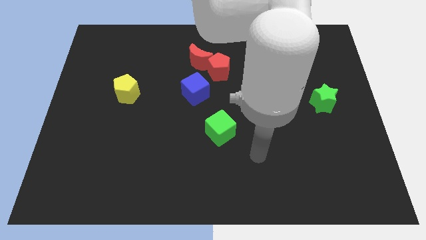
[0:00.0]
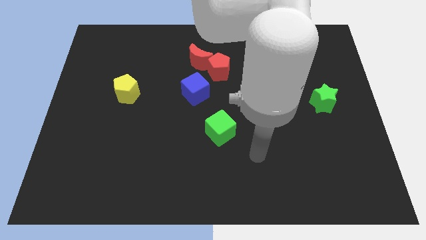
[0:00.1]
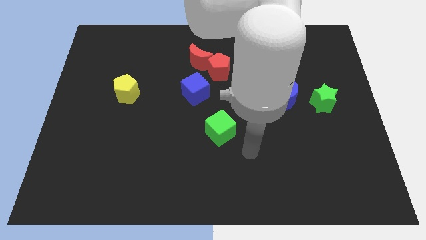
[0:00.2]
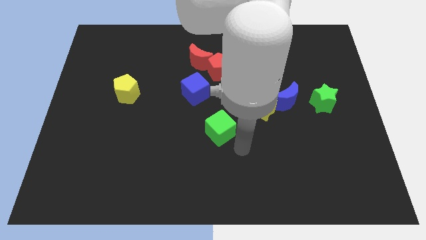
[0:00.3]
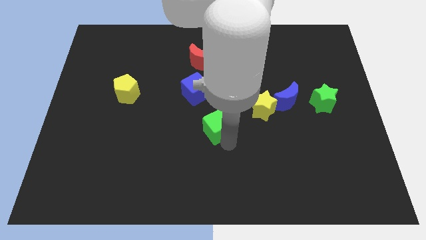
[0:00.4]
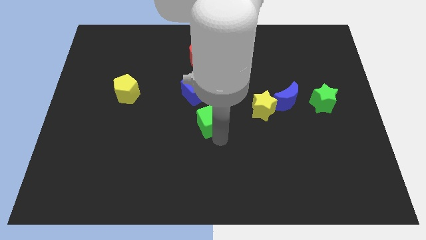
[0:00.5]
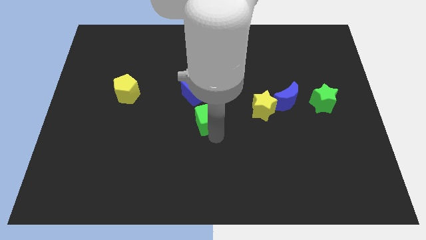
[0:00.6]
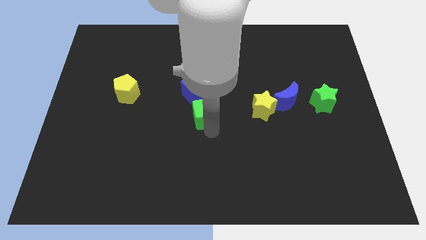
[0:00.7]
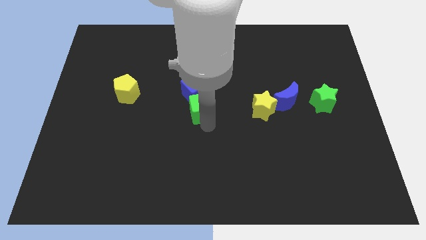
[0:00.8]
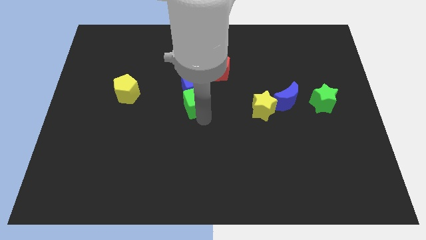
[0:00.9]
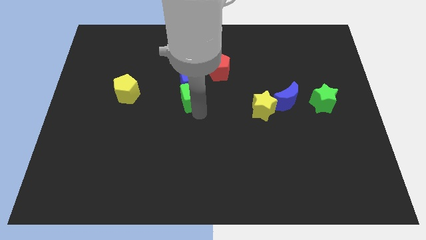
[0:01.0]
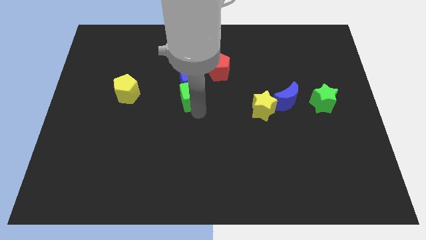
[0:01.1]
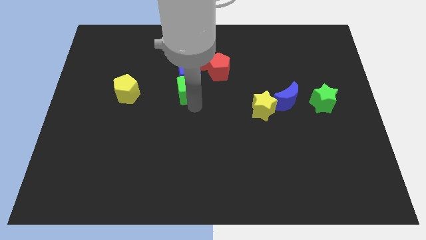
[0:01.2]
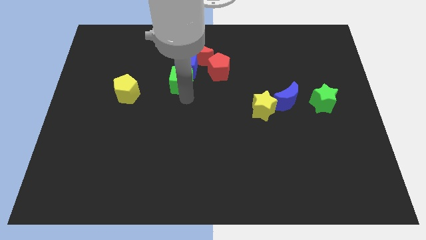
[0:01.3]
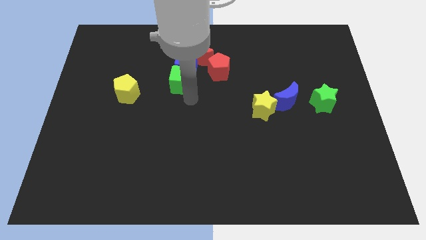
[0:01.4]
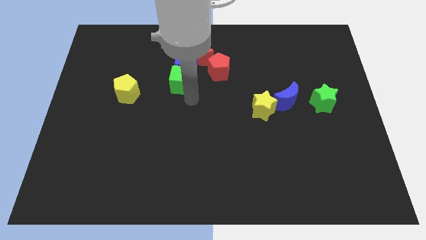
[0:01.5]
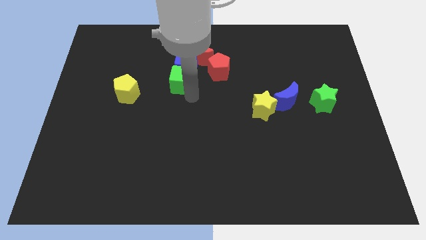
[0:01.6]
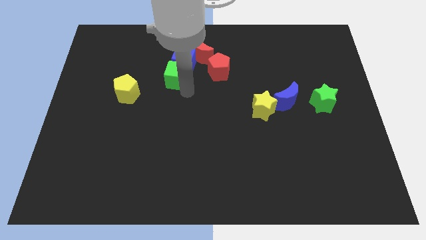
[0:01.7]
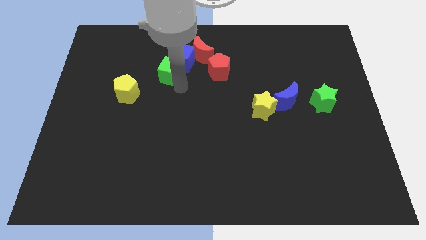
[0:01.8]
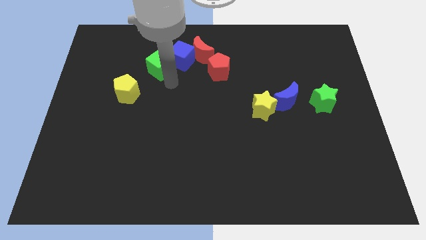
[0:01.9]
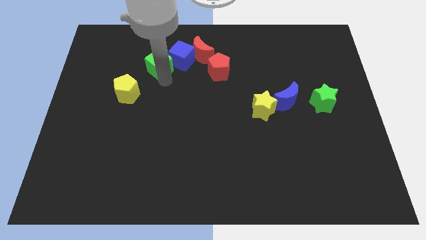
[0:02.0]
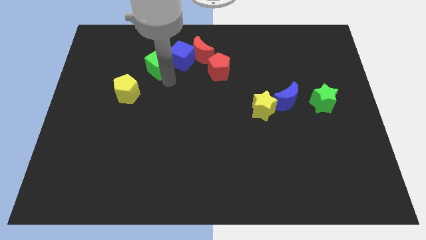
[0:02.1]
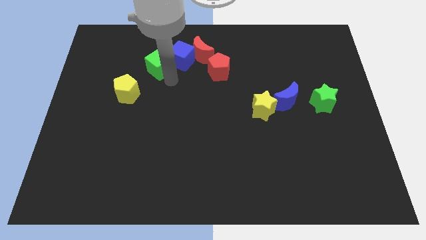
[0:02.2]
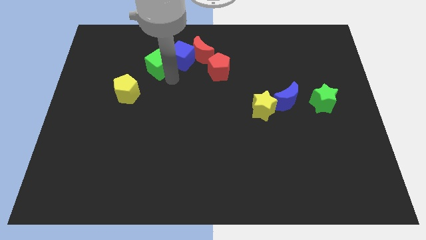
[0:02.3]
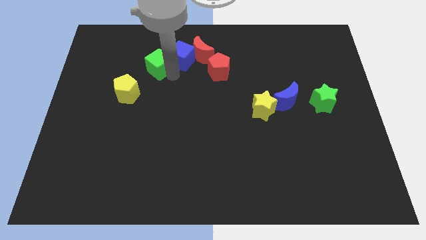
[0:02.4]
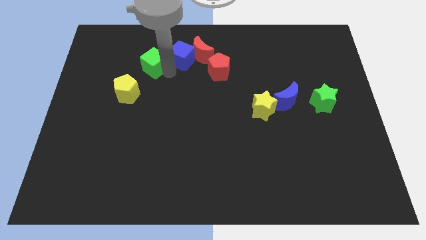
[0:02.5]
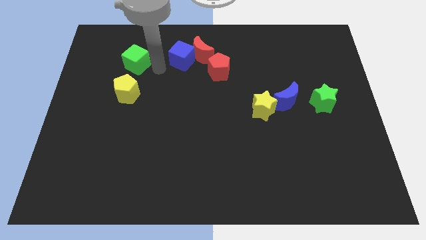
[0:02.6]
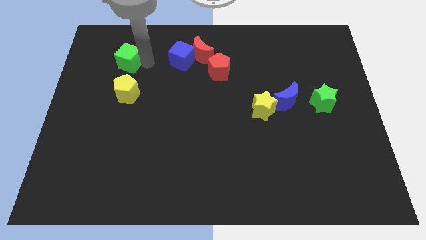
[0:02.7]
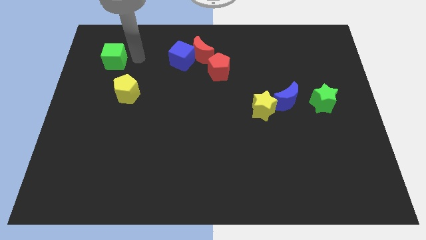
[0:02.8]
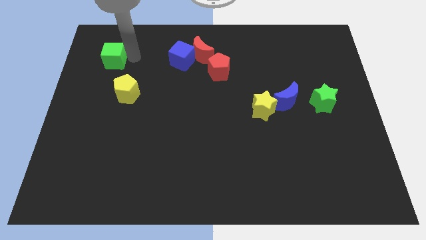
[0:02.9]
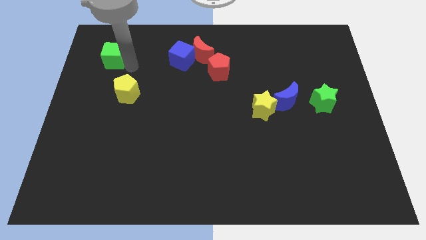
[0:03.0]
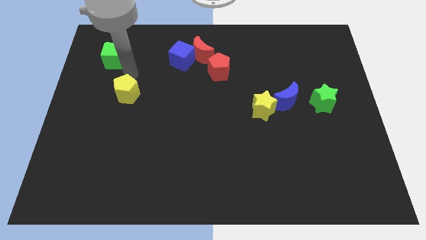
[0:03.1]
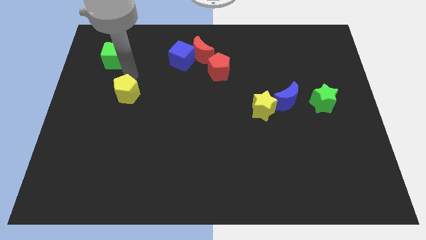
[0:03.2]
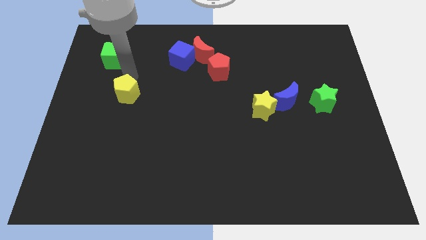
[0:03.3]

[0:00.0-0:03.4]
push the green cube to the top left side of the yellow pentagon

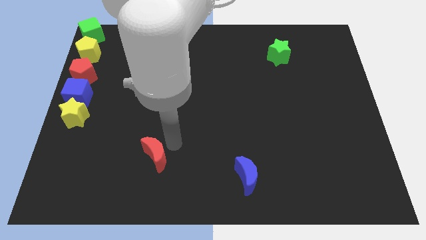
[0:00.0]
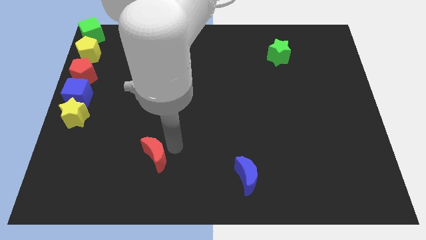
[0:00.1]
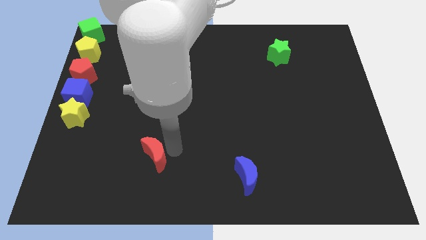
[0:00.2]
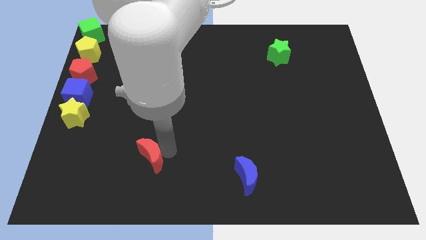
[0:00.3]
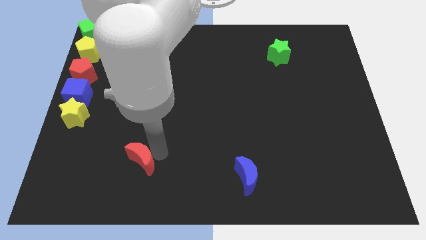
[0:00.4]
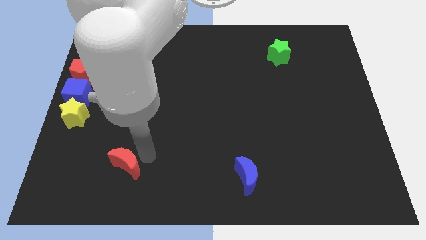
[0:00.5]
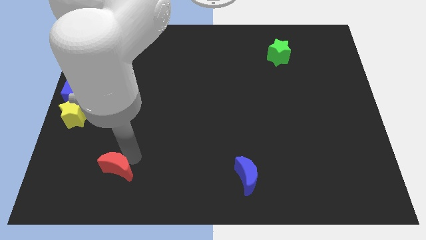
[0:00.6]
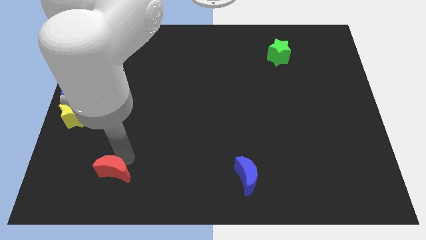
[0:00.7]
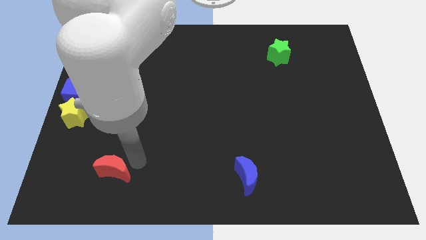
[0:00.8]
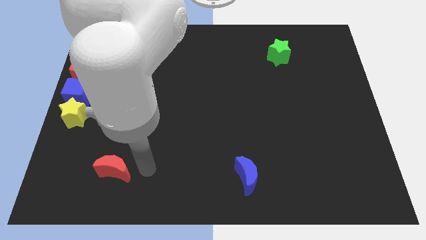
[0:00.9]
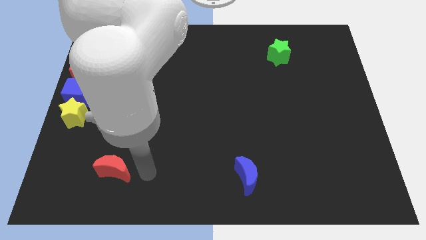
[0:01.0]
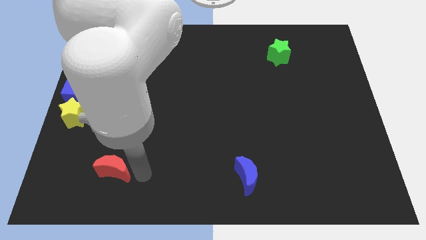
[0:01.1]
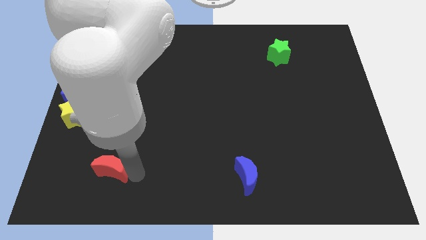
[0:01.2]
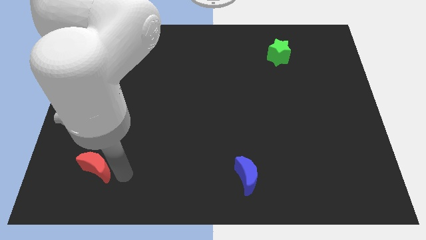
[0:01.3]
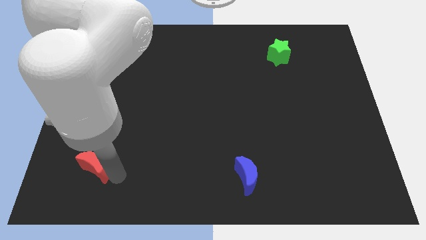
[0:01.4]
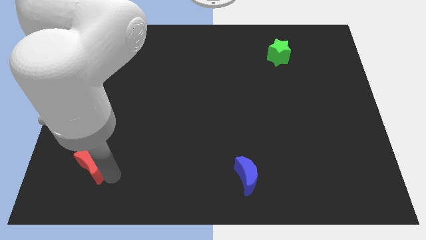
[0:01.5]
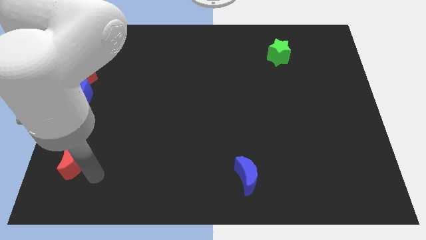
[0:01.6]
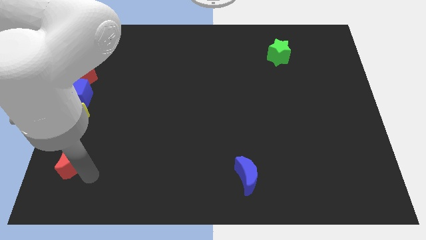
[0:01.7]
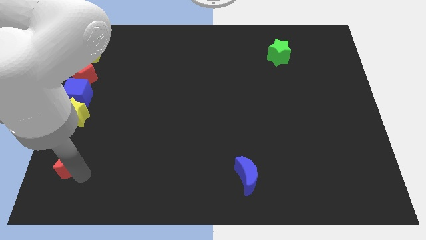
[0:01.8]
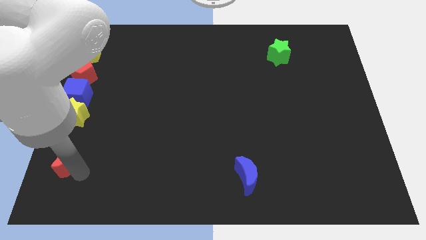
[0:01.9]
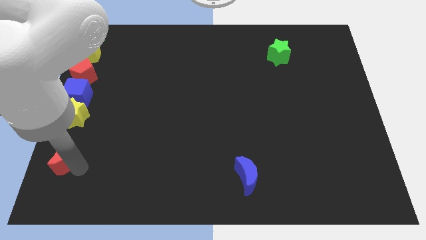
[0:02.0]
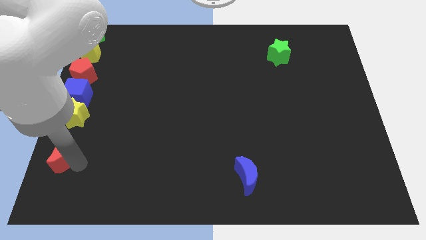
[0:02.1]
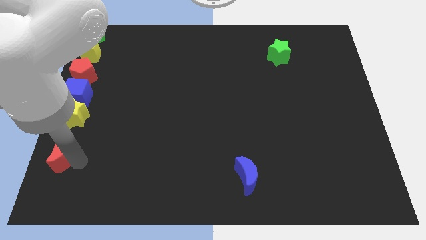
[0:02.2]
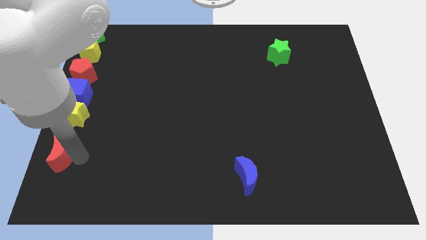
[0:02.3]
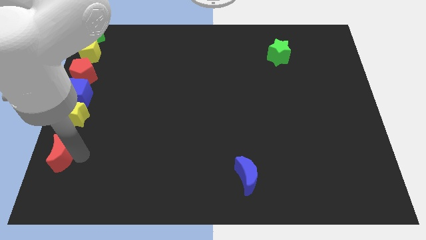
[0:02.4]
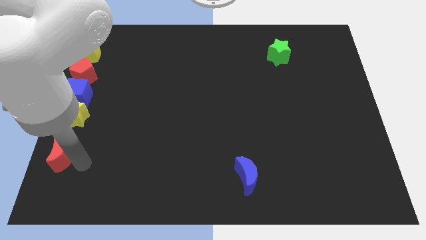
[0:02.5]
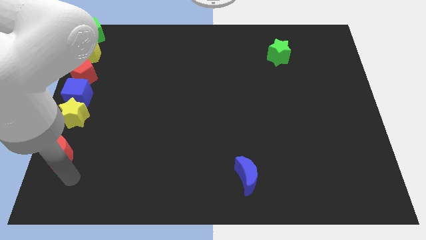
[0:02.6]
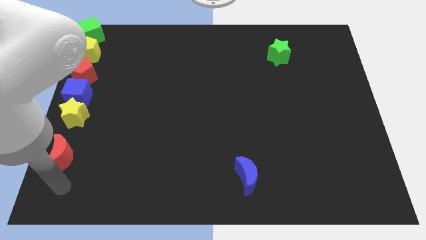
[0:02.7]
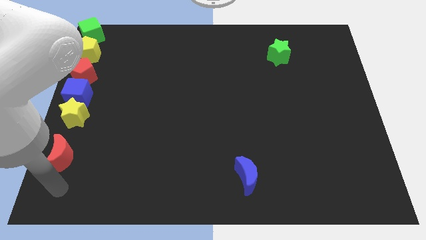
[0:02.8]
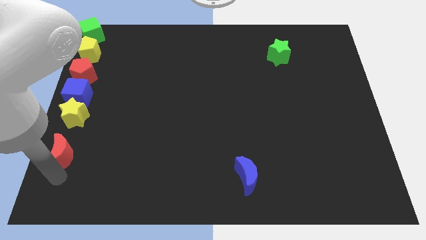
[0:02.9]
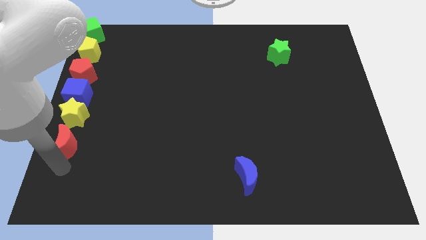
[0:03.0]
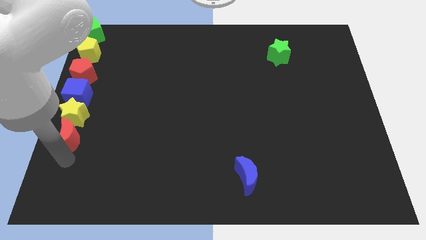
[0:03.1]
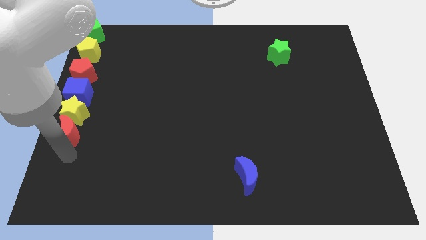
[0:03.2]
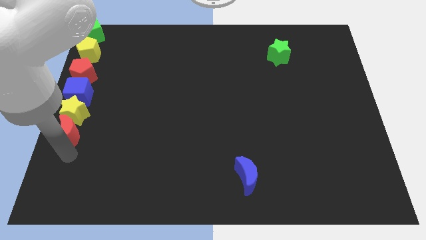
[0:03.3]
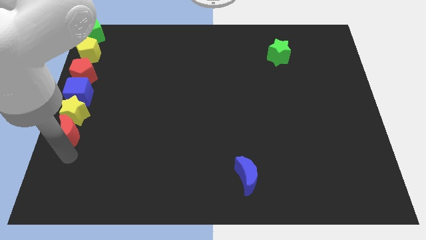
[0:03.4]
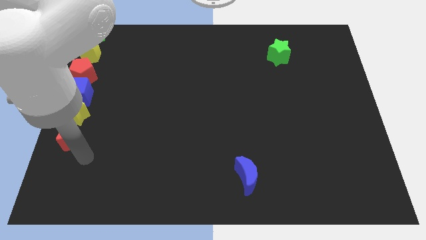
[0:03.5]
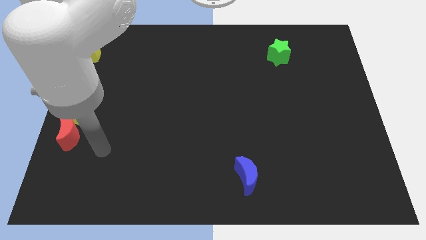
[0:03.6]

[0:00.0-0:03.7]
push red moon in to yellow star

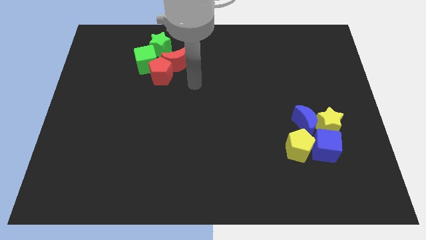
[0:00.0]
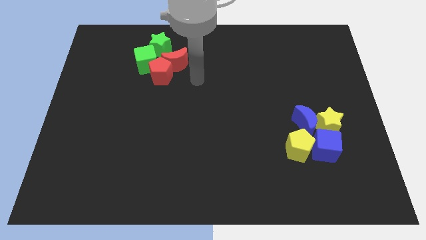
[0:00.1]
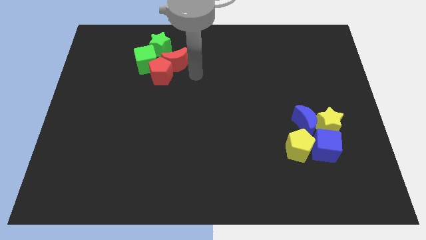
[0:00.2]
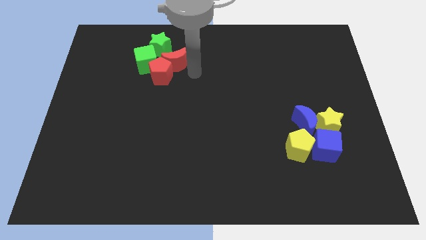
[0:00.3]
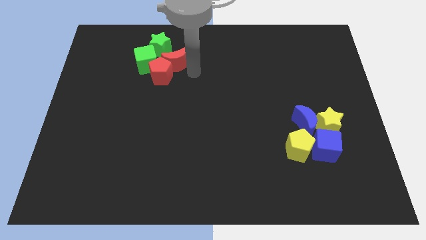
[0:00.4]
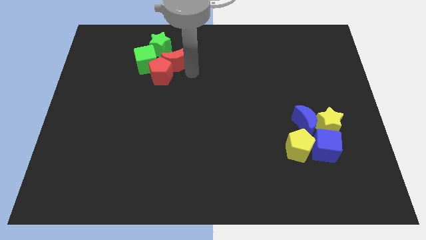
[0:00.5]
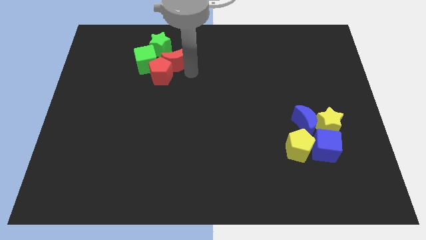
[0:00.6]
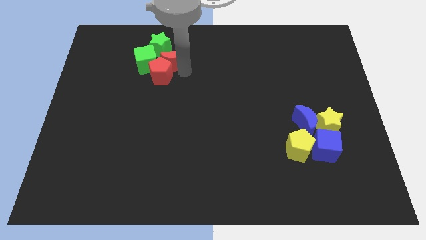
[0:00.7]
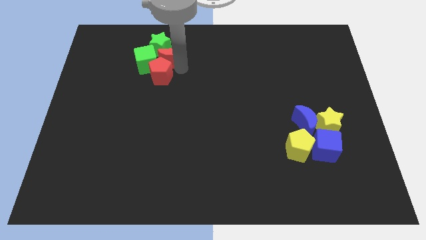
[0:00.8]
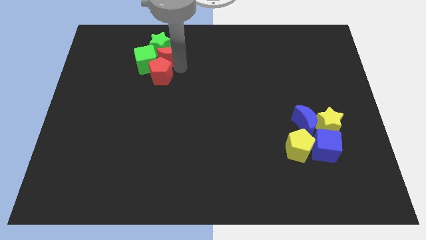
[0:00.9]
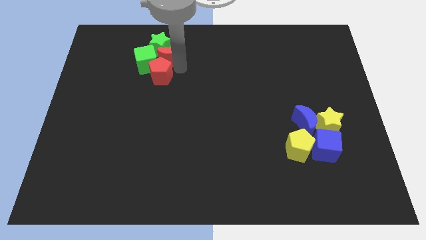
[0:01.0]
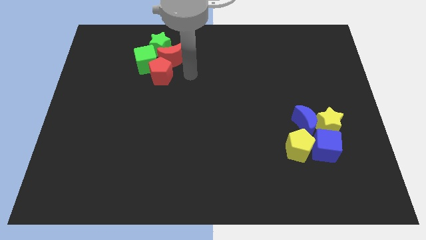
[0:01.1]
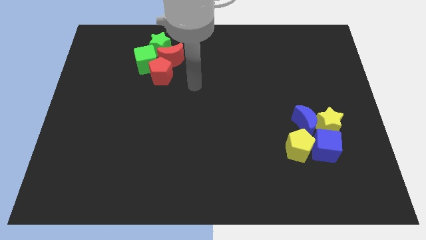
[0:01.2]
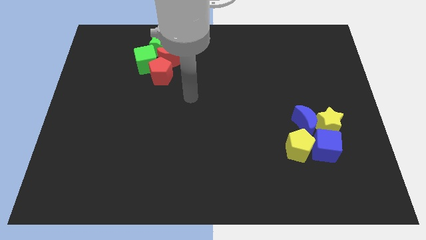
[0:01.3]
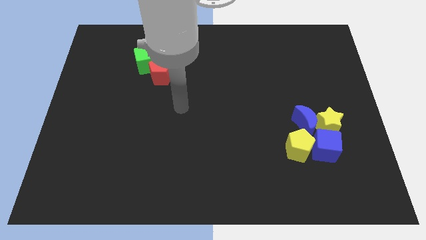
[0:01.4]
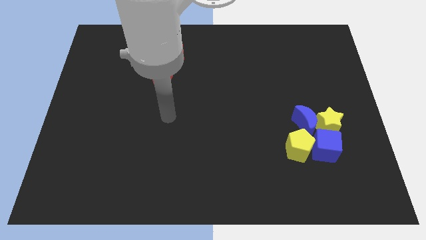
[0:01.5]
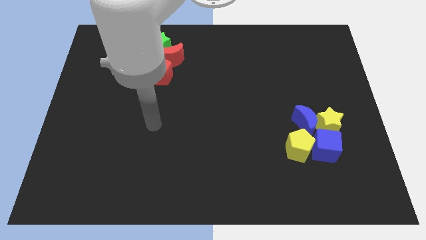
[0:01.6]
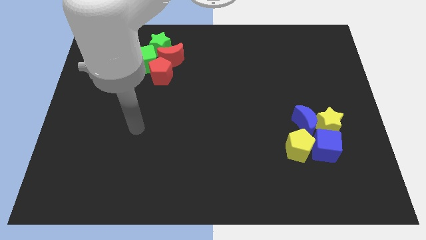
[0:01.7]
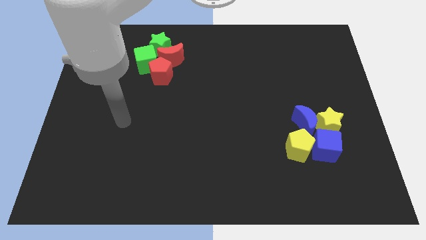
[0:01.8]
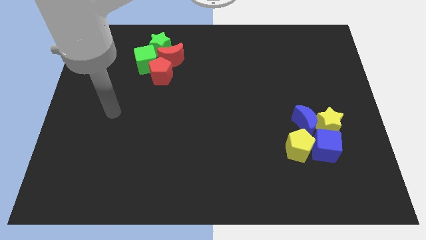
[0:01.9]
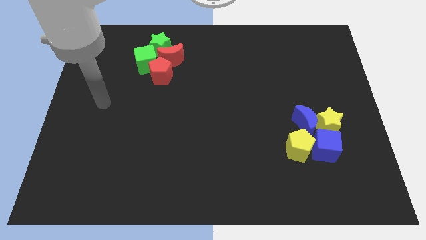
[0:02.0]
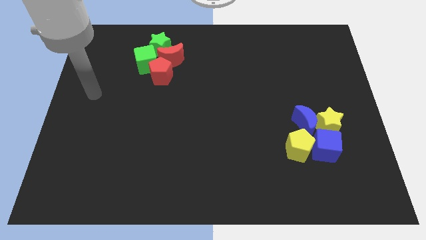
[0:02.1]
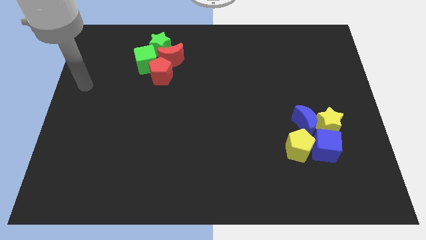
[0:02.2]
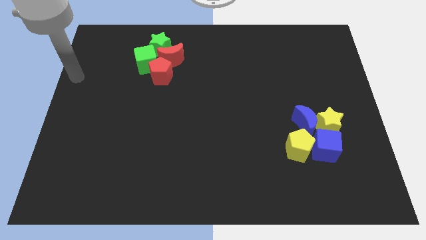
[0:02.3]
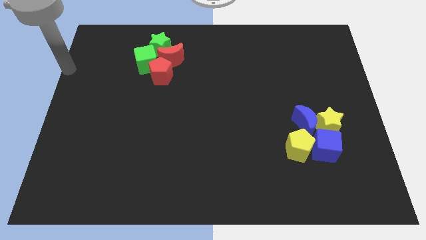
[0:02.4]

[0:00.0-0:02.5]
push the red crescent close to the green star
